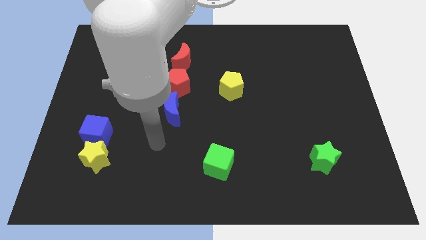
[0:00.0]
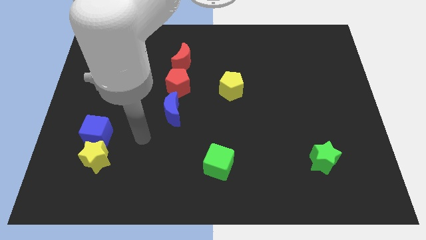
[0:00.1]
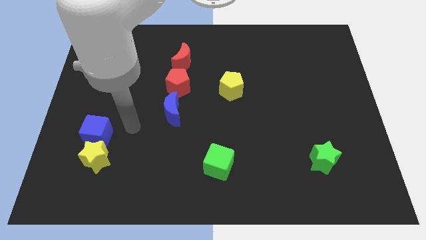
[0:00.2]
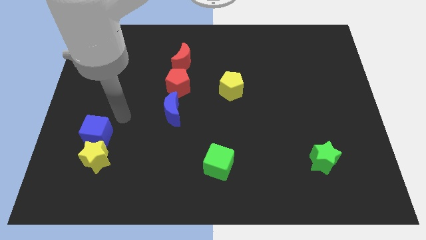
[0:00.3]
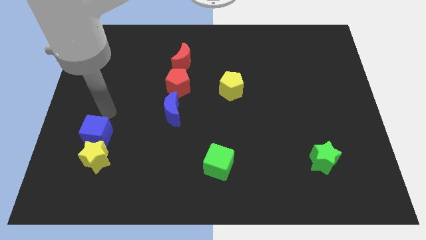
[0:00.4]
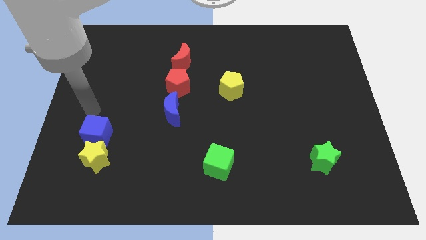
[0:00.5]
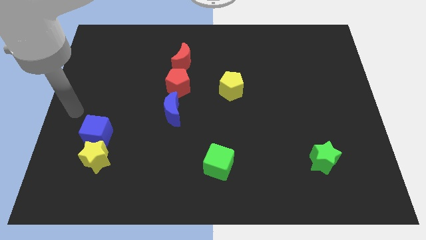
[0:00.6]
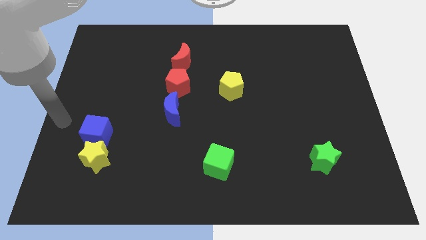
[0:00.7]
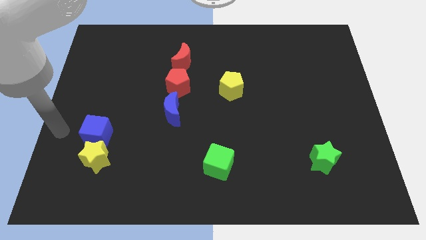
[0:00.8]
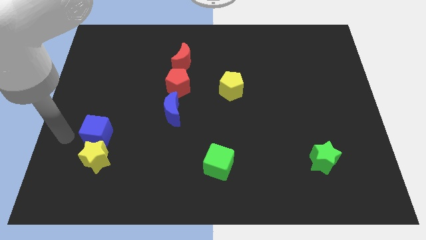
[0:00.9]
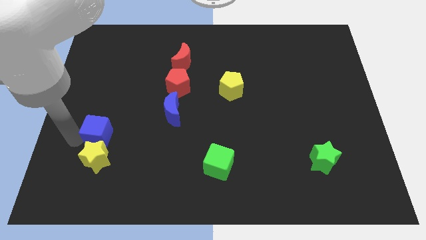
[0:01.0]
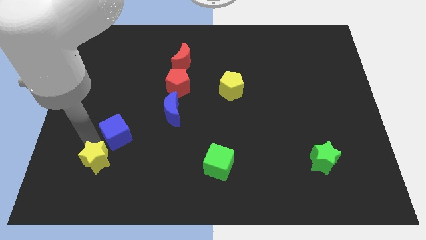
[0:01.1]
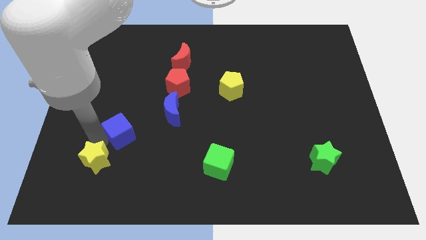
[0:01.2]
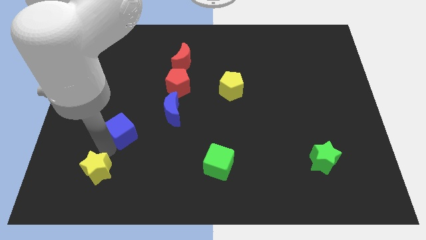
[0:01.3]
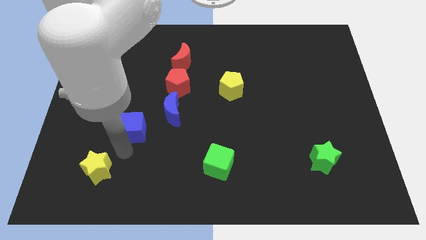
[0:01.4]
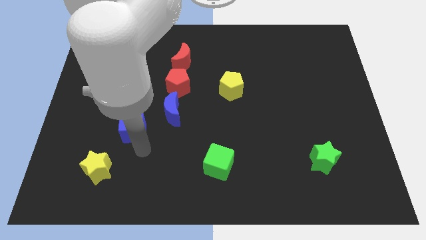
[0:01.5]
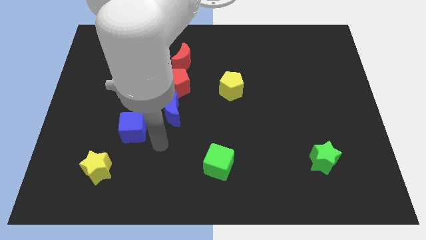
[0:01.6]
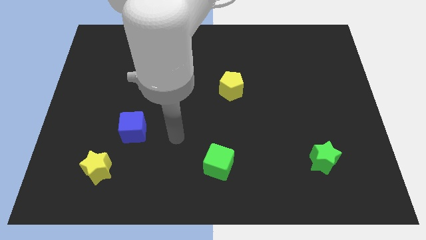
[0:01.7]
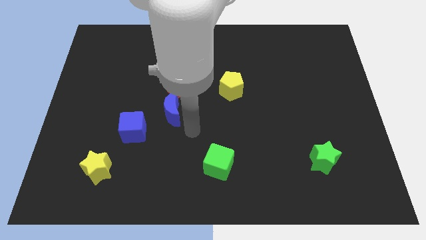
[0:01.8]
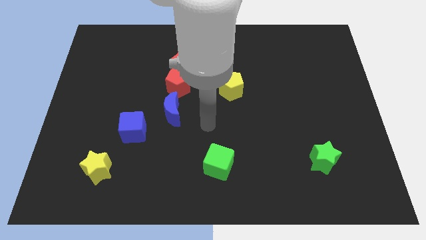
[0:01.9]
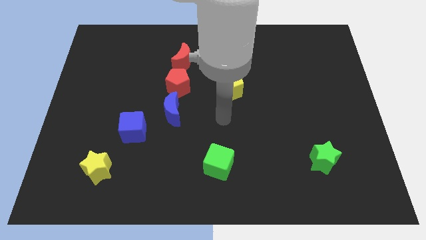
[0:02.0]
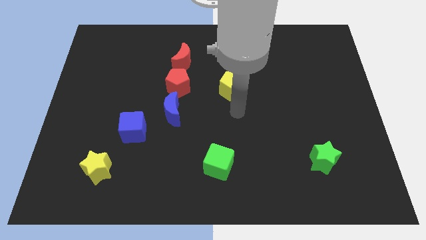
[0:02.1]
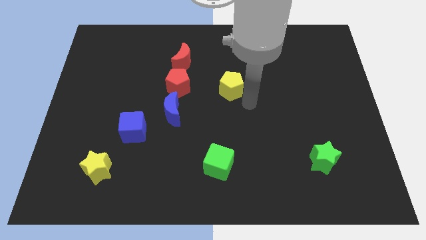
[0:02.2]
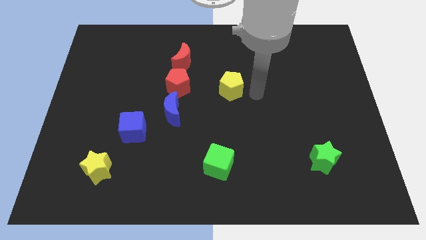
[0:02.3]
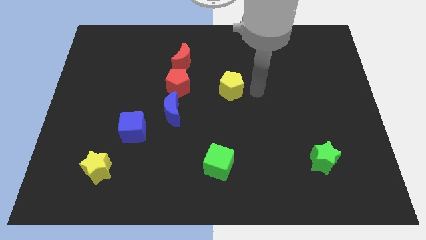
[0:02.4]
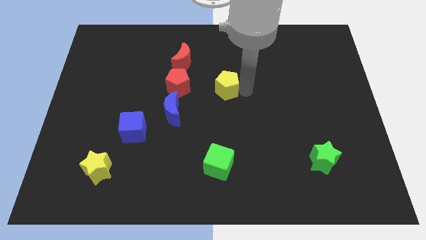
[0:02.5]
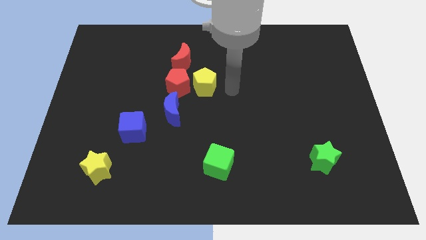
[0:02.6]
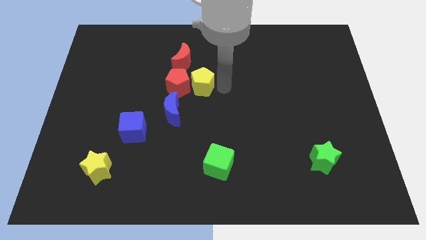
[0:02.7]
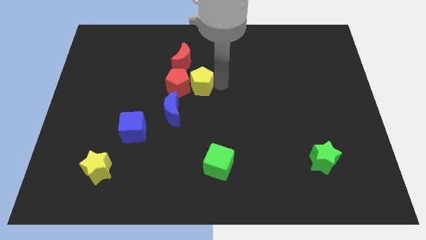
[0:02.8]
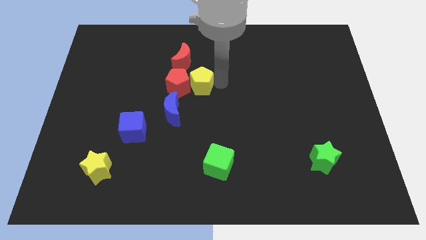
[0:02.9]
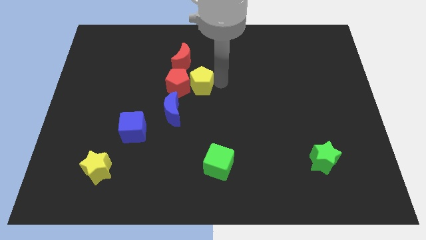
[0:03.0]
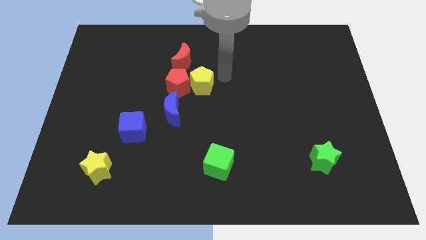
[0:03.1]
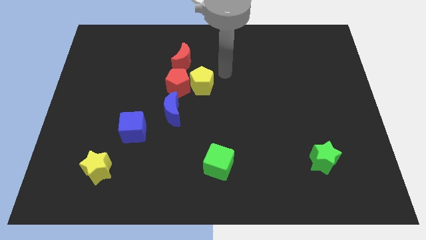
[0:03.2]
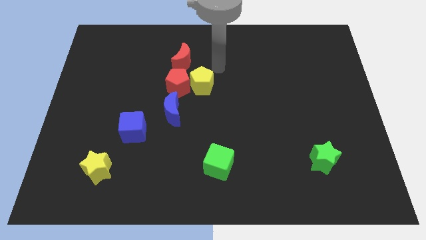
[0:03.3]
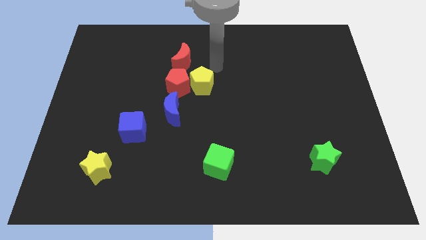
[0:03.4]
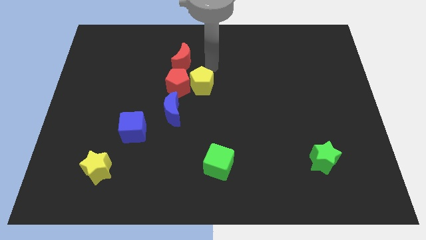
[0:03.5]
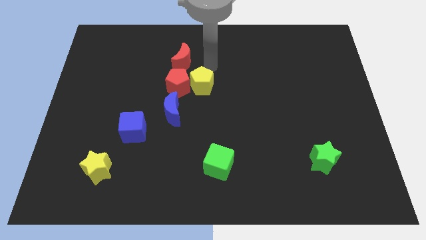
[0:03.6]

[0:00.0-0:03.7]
move the yellow pentagon into the red pentagon

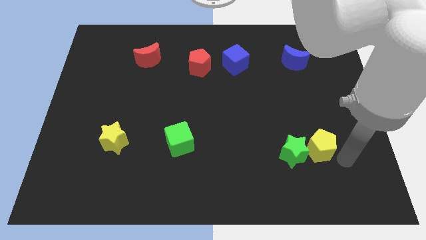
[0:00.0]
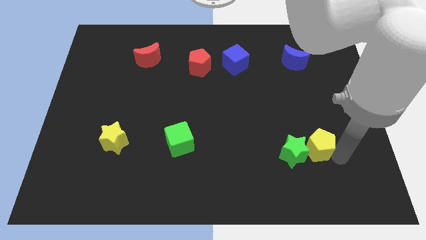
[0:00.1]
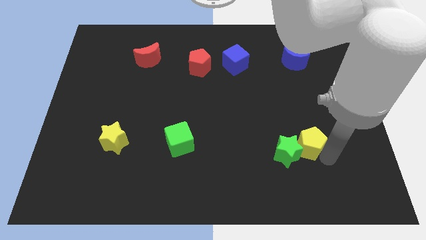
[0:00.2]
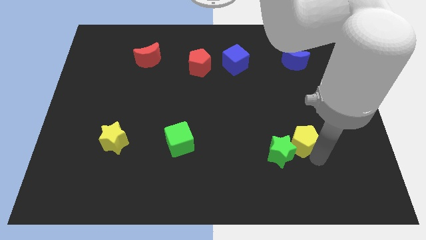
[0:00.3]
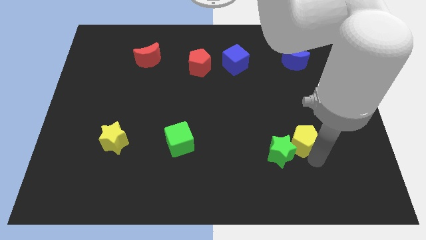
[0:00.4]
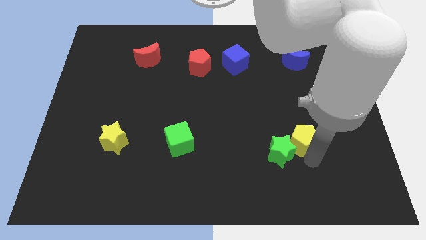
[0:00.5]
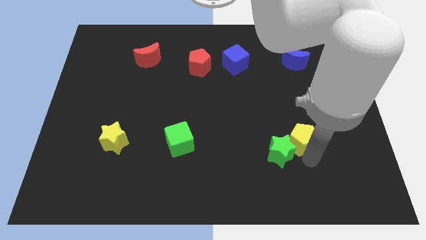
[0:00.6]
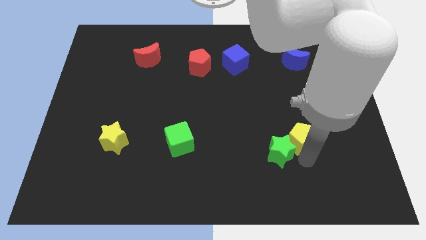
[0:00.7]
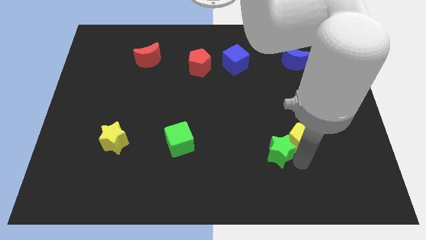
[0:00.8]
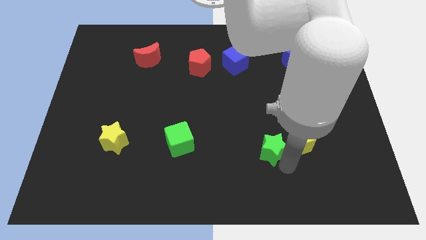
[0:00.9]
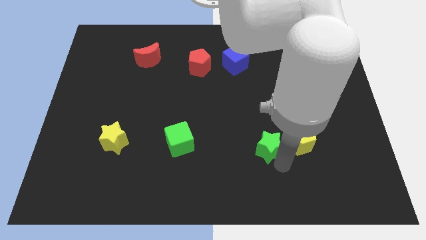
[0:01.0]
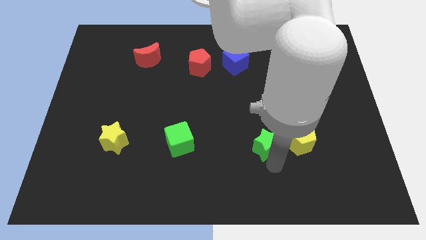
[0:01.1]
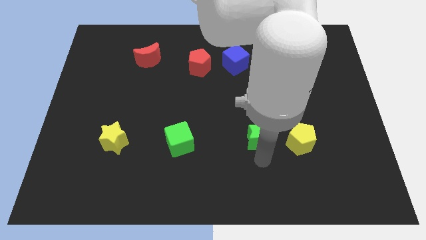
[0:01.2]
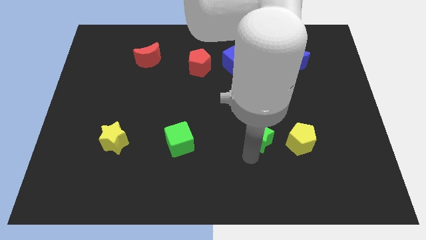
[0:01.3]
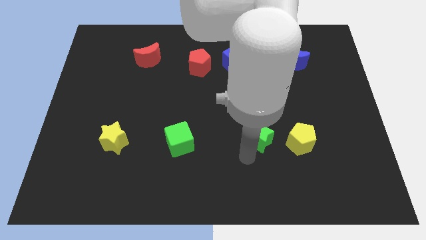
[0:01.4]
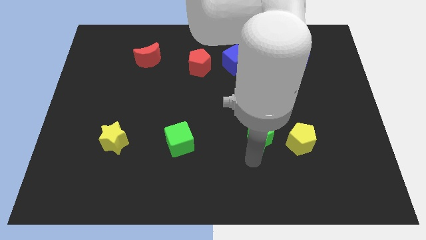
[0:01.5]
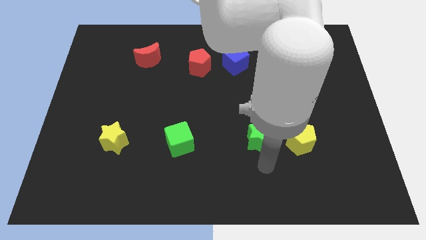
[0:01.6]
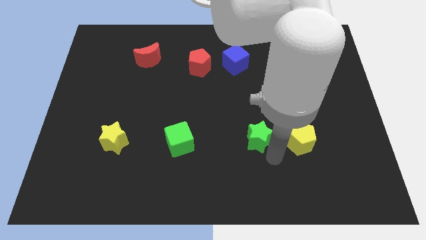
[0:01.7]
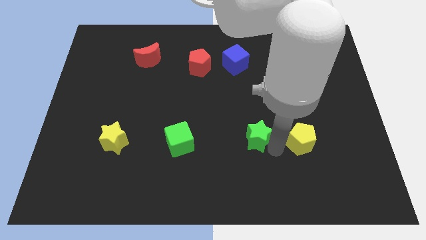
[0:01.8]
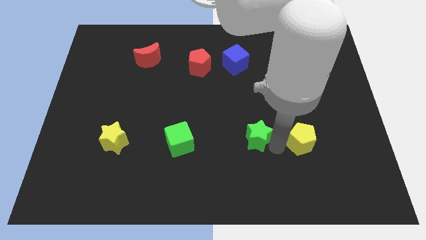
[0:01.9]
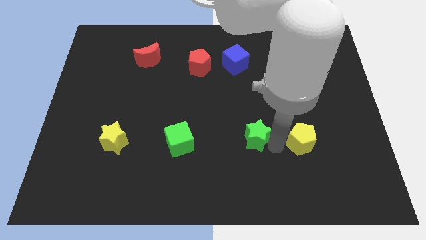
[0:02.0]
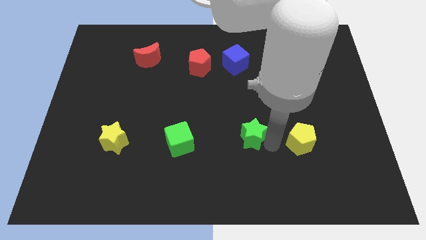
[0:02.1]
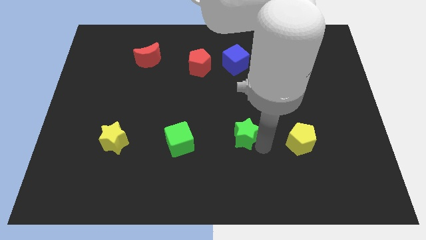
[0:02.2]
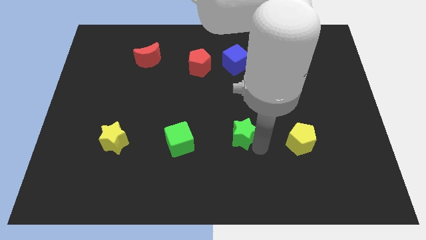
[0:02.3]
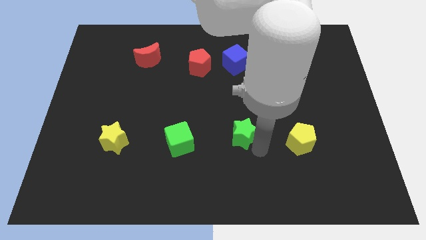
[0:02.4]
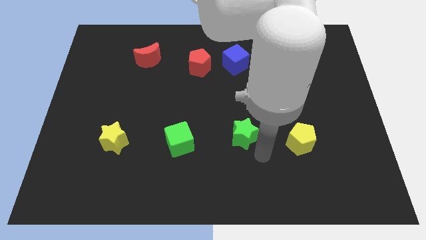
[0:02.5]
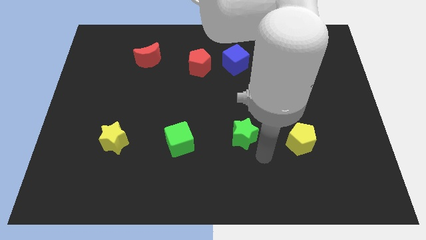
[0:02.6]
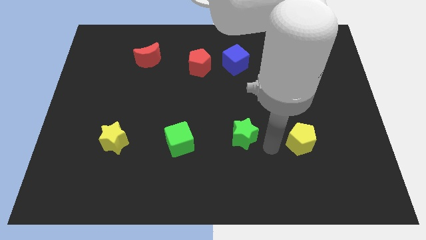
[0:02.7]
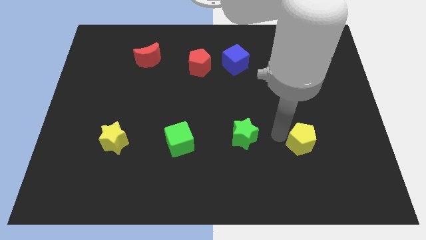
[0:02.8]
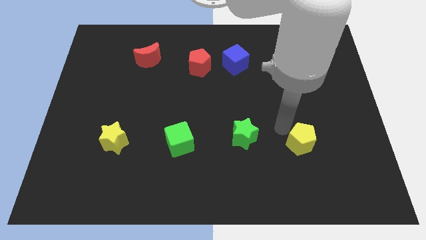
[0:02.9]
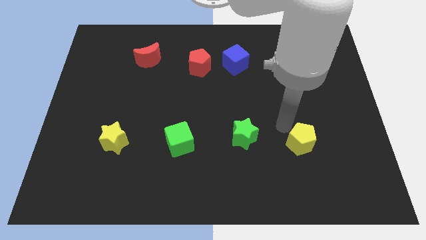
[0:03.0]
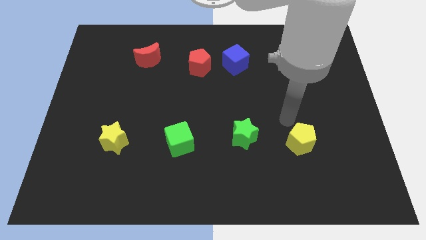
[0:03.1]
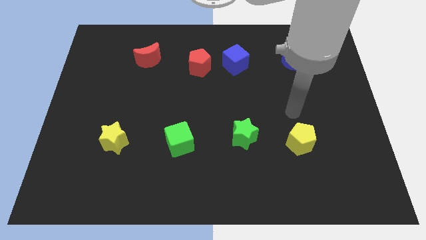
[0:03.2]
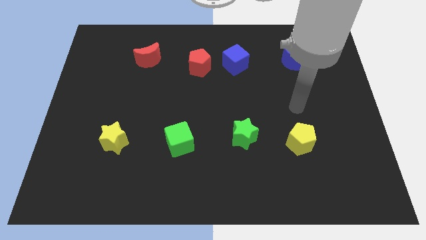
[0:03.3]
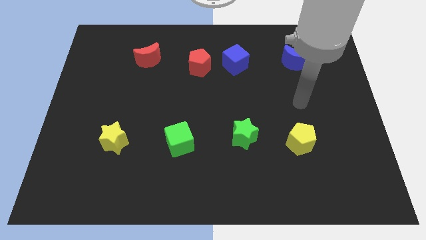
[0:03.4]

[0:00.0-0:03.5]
push the green star with yellow pentagon to the left

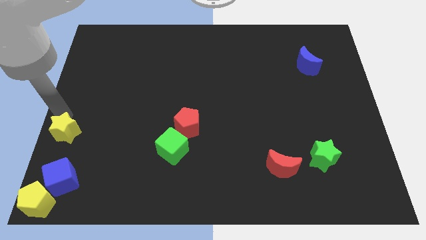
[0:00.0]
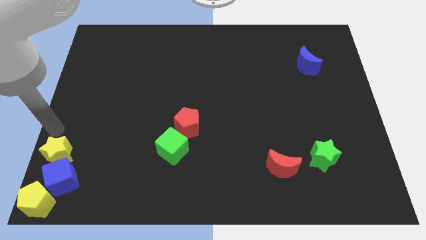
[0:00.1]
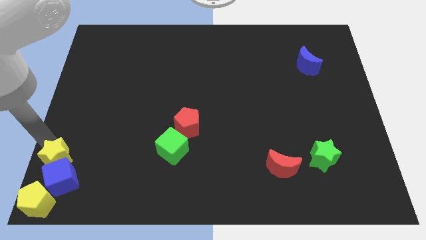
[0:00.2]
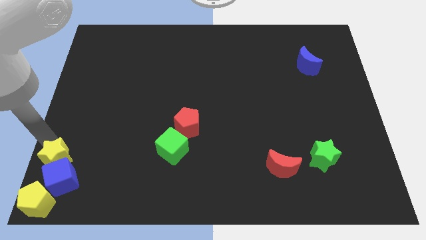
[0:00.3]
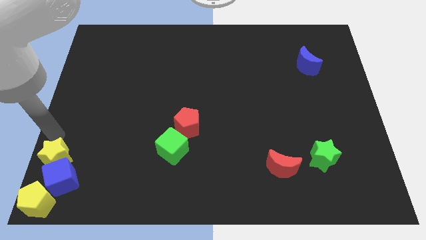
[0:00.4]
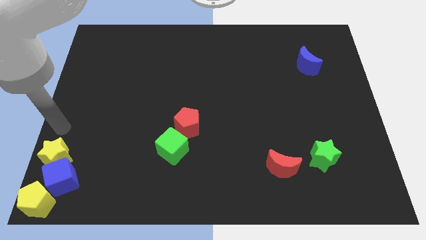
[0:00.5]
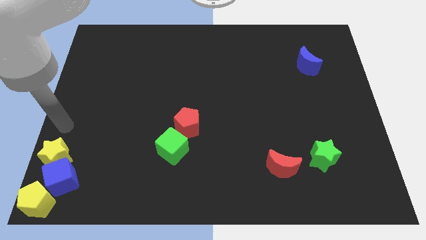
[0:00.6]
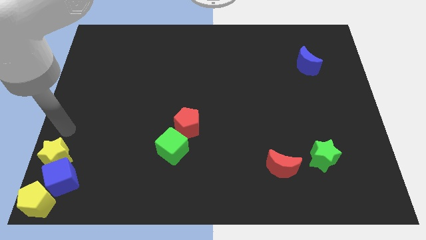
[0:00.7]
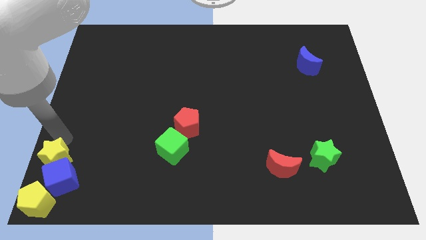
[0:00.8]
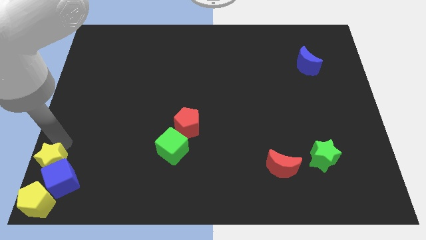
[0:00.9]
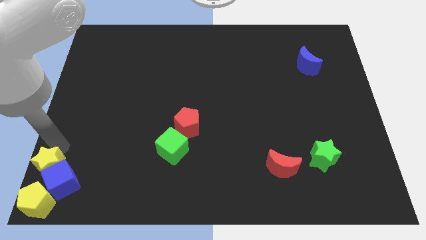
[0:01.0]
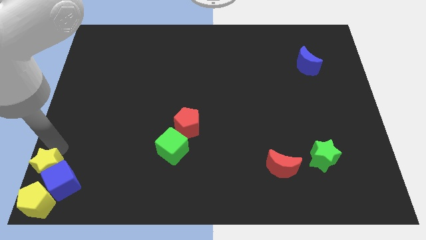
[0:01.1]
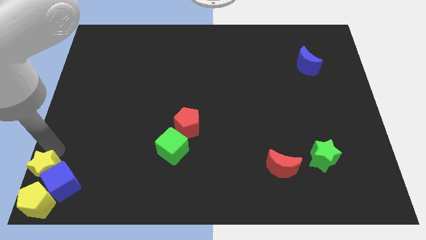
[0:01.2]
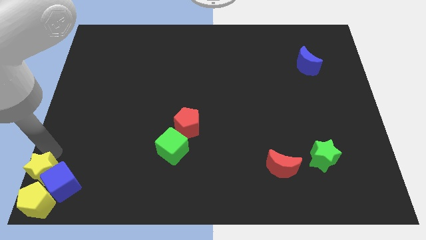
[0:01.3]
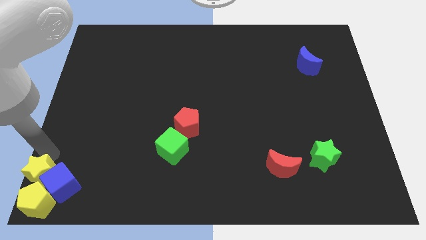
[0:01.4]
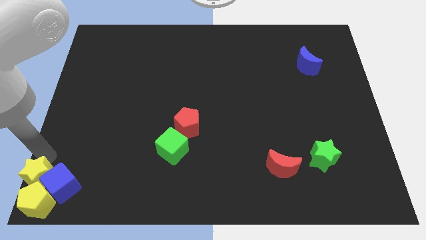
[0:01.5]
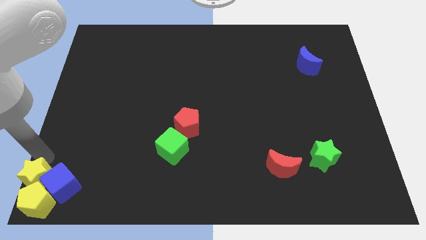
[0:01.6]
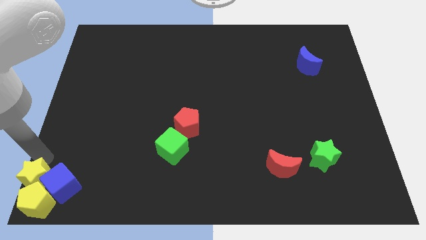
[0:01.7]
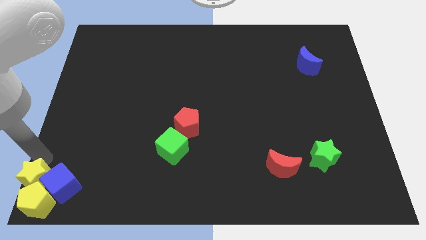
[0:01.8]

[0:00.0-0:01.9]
push the yellow star to the top left to the yellow pentagon
